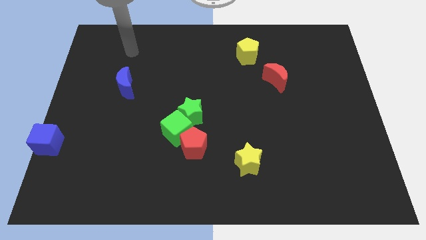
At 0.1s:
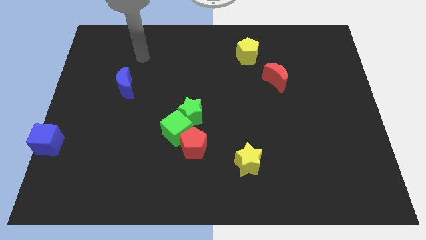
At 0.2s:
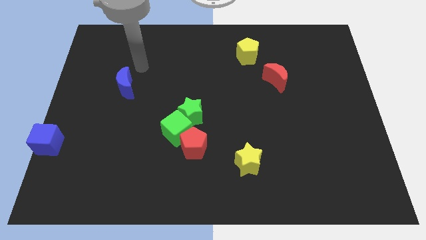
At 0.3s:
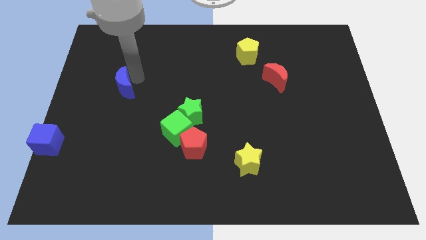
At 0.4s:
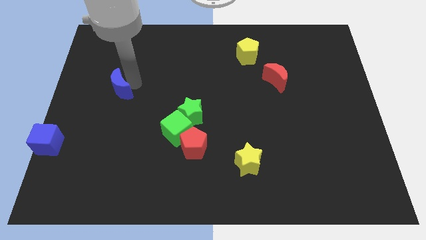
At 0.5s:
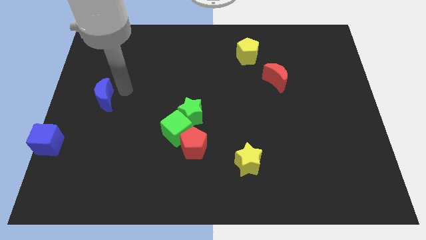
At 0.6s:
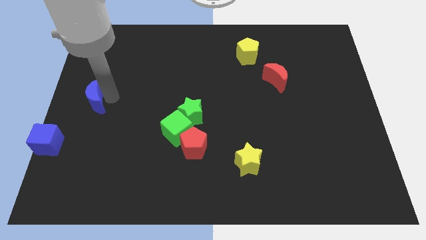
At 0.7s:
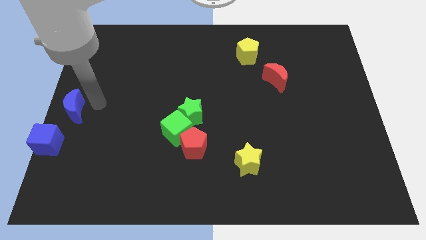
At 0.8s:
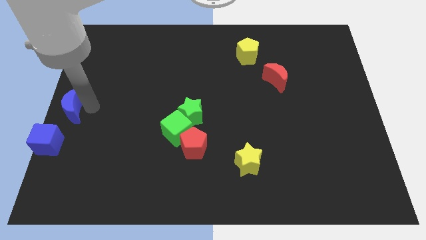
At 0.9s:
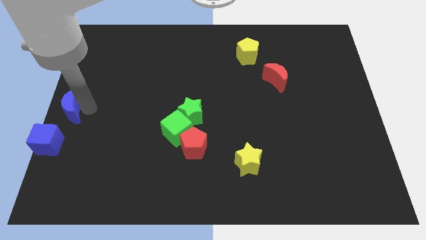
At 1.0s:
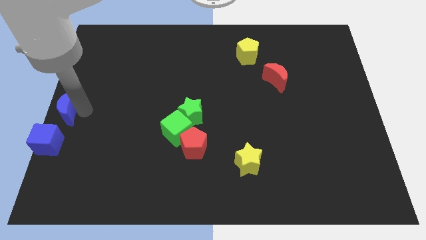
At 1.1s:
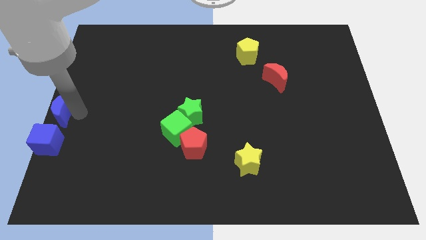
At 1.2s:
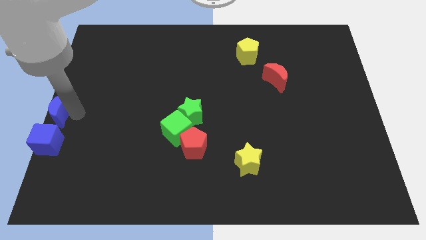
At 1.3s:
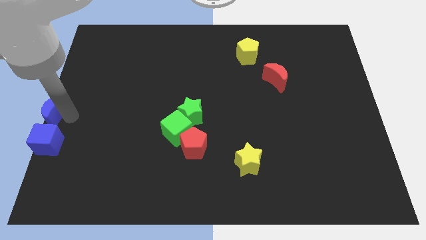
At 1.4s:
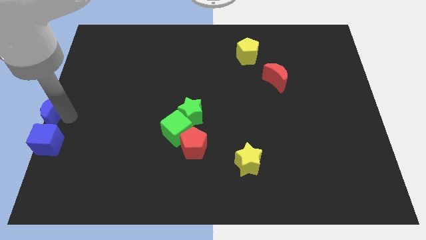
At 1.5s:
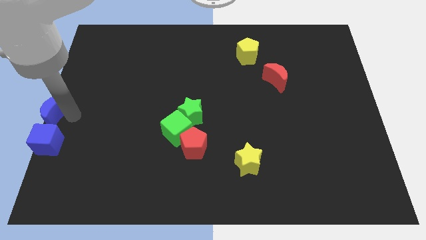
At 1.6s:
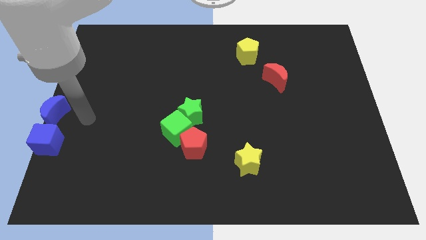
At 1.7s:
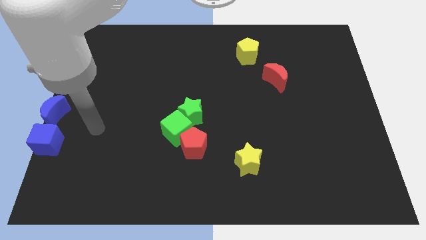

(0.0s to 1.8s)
push the blue moon to the top side of the blue cube

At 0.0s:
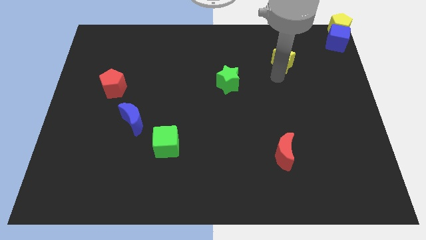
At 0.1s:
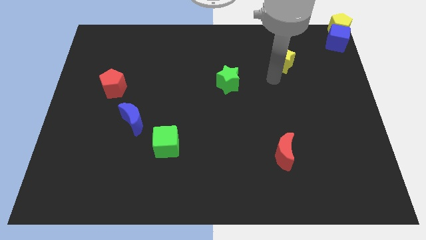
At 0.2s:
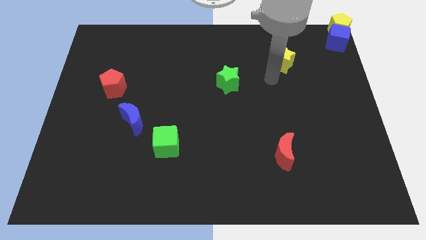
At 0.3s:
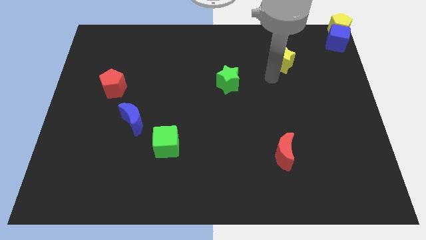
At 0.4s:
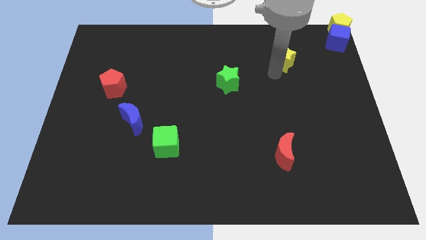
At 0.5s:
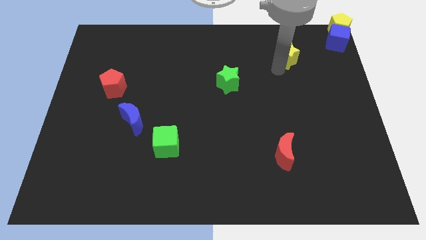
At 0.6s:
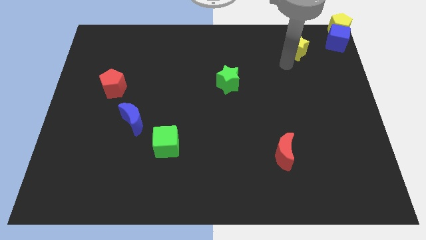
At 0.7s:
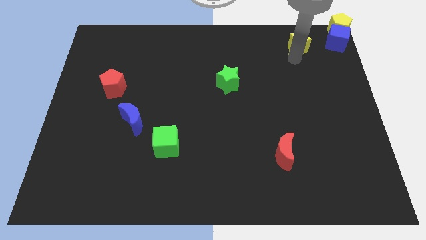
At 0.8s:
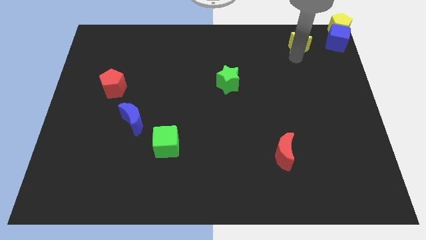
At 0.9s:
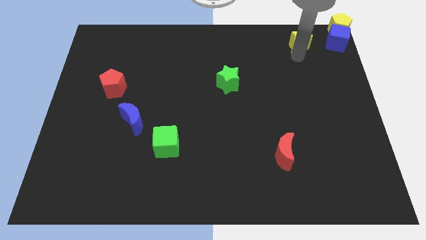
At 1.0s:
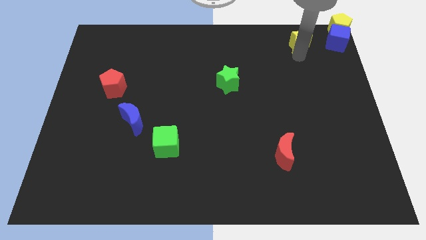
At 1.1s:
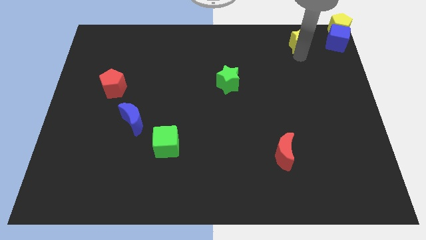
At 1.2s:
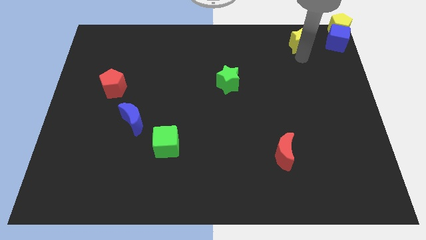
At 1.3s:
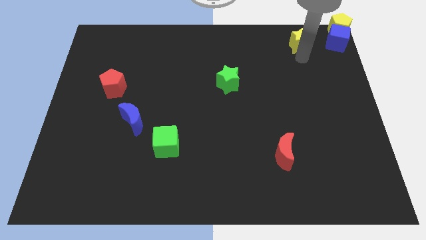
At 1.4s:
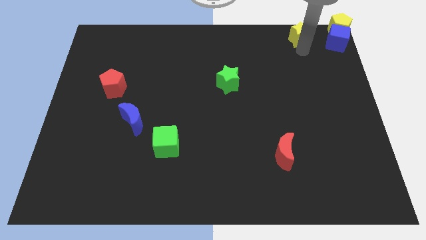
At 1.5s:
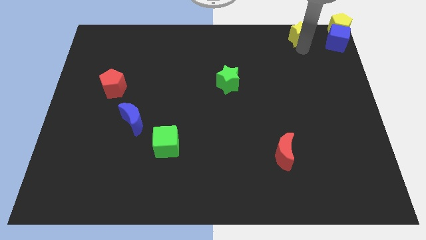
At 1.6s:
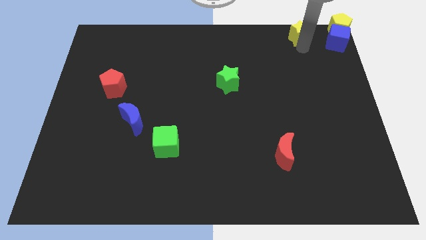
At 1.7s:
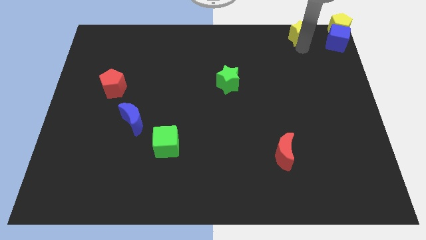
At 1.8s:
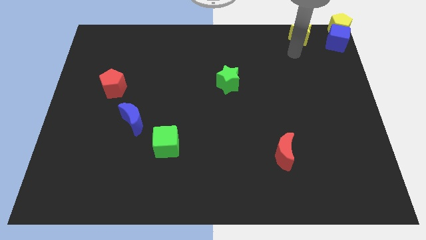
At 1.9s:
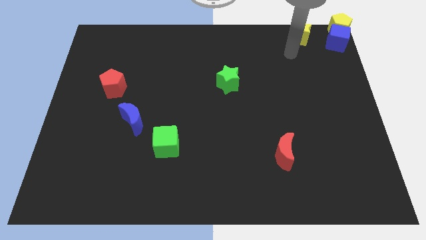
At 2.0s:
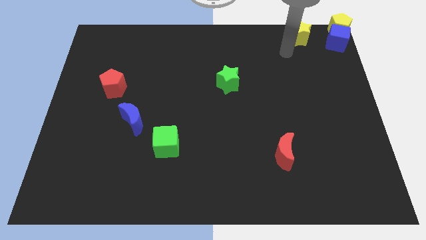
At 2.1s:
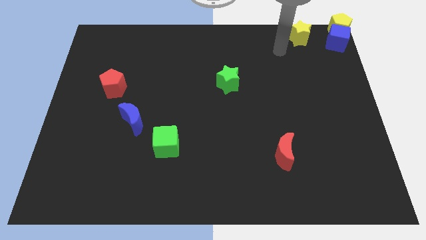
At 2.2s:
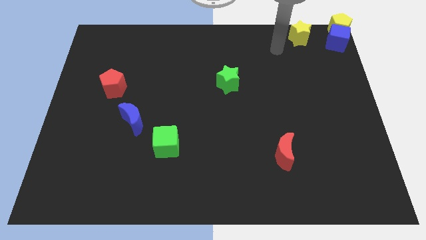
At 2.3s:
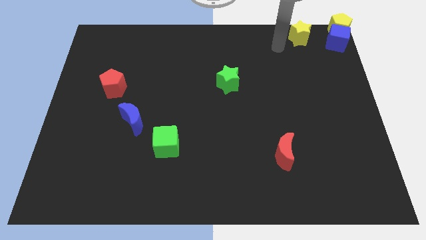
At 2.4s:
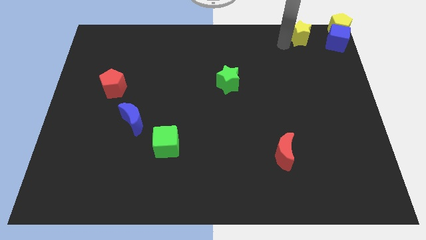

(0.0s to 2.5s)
place the yellow star left to the blue cube

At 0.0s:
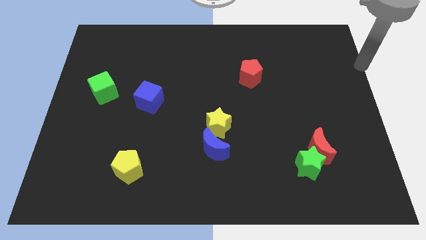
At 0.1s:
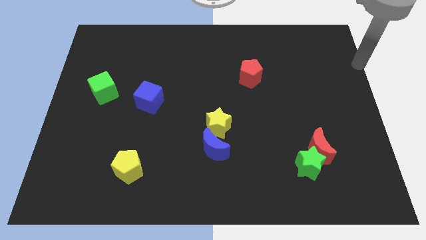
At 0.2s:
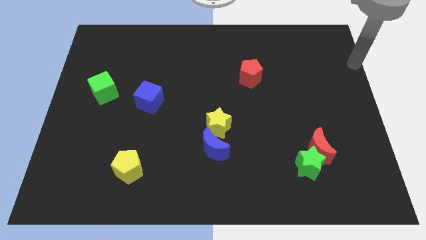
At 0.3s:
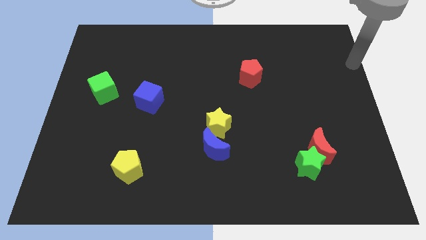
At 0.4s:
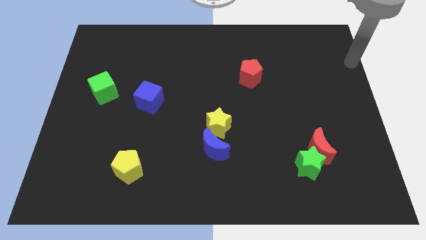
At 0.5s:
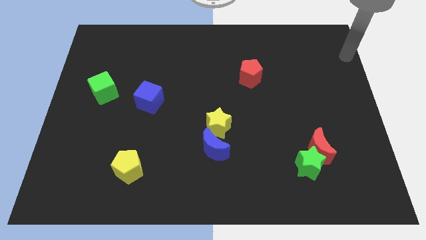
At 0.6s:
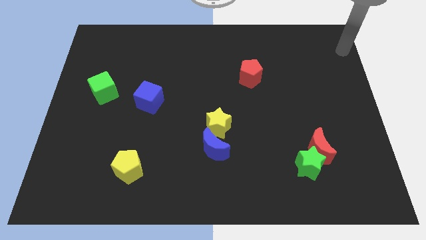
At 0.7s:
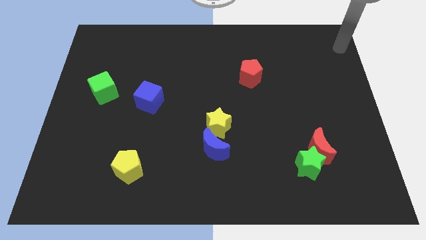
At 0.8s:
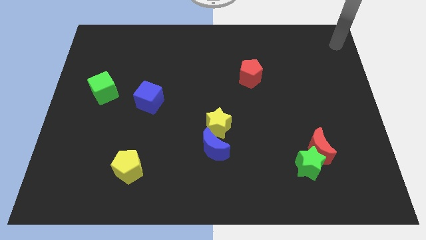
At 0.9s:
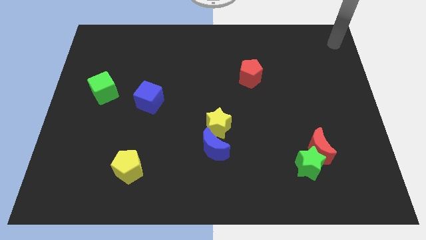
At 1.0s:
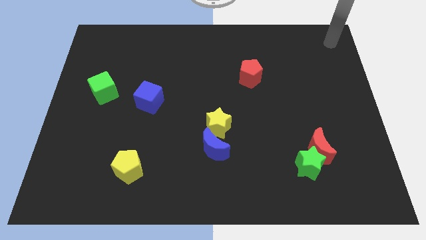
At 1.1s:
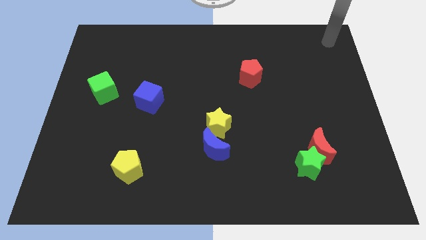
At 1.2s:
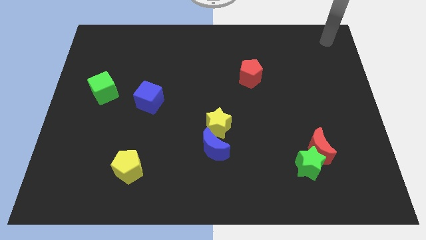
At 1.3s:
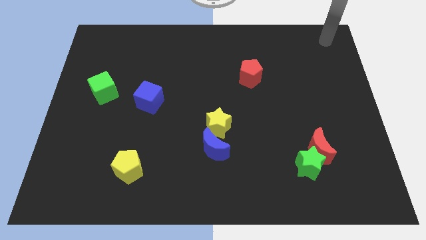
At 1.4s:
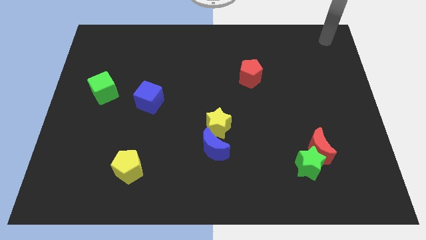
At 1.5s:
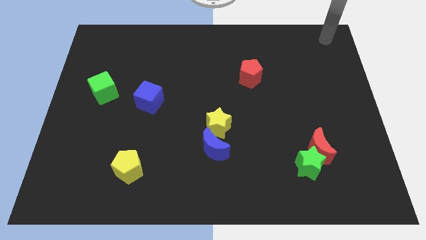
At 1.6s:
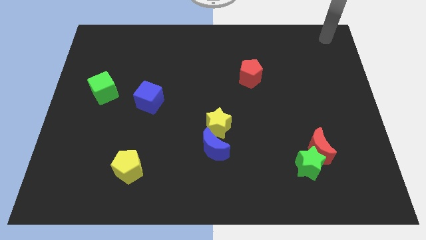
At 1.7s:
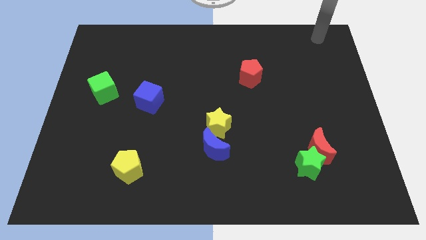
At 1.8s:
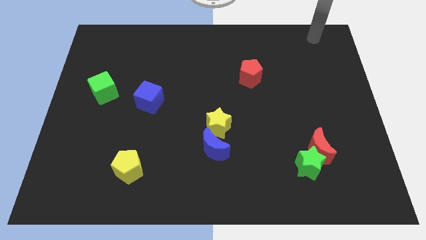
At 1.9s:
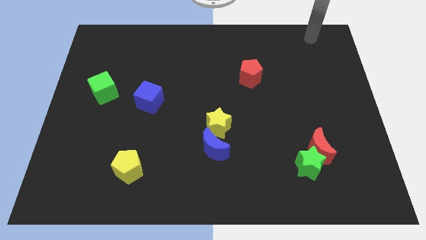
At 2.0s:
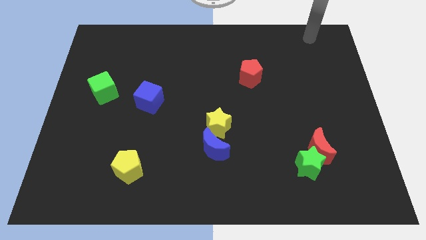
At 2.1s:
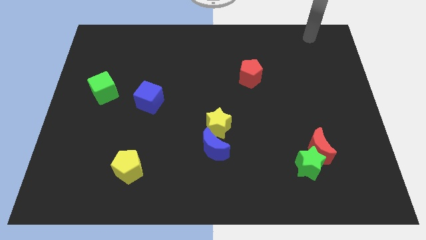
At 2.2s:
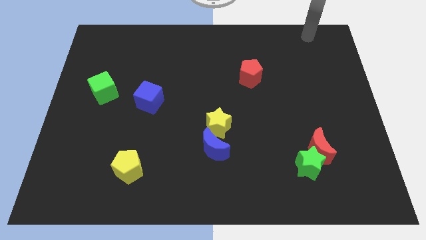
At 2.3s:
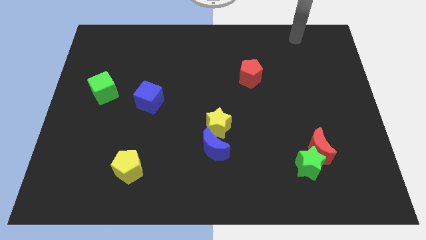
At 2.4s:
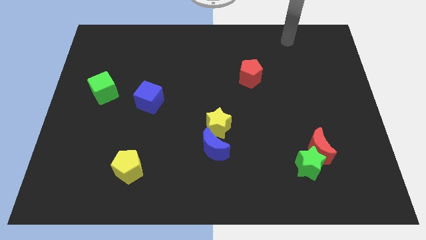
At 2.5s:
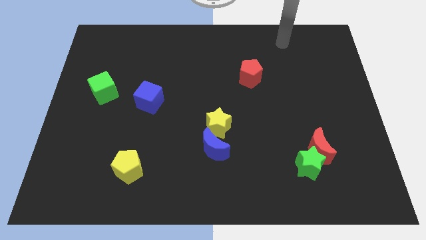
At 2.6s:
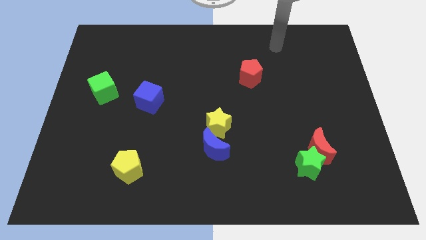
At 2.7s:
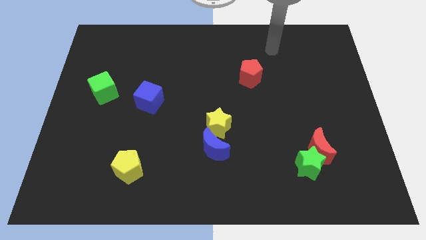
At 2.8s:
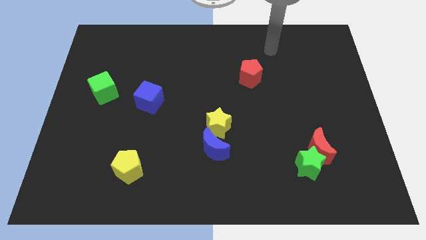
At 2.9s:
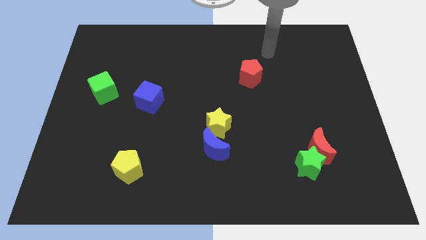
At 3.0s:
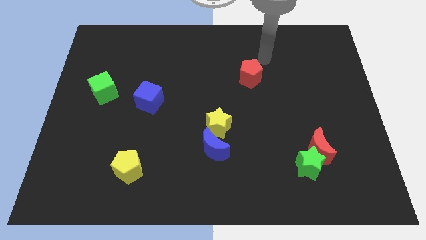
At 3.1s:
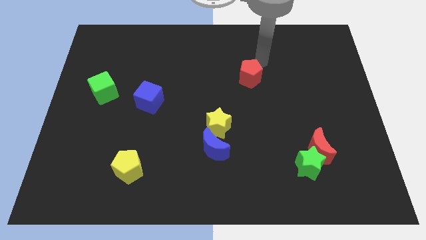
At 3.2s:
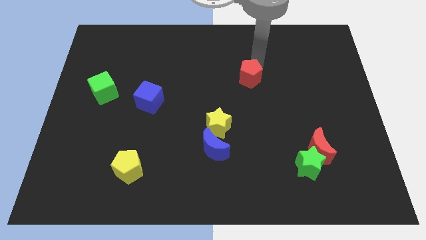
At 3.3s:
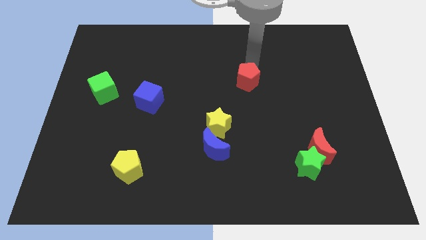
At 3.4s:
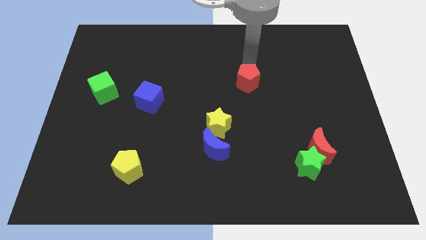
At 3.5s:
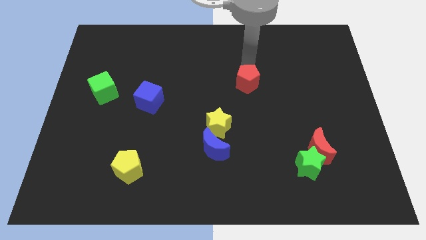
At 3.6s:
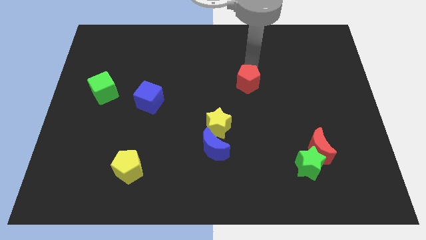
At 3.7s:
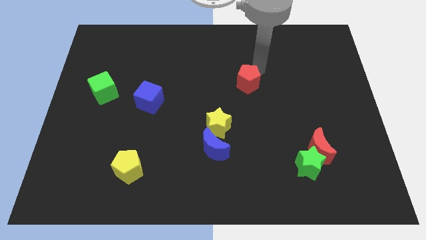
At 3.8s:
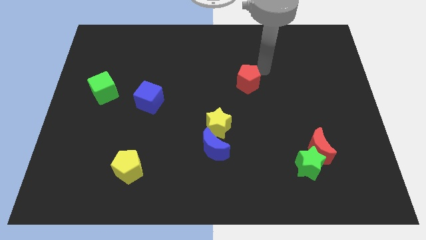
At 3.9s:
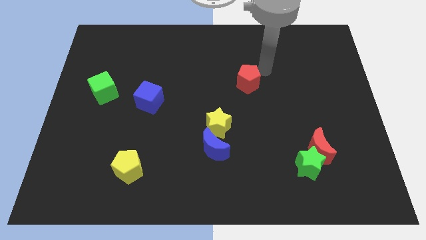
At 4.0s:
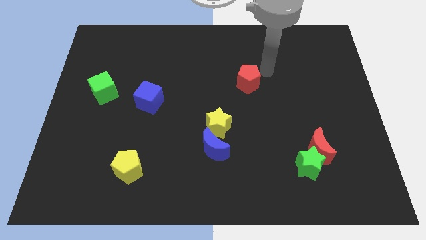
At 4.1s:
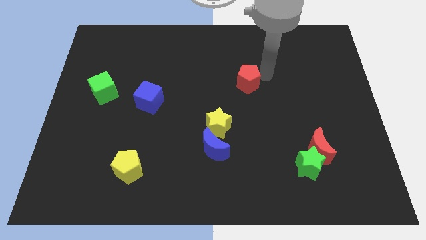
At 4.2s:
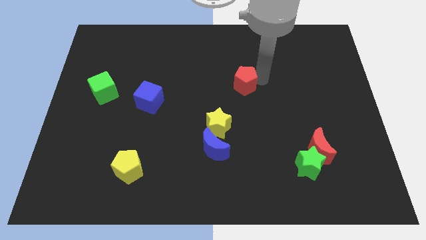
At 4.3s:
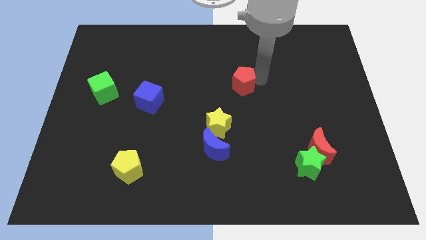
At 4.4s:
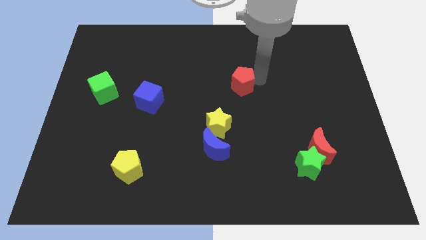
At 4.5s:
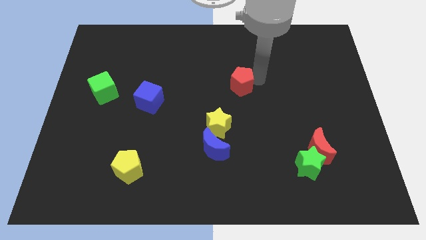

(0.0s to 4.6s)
slightly push the red pentagon towards the yellow star

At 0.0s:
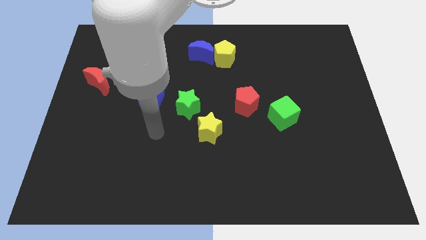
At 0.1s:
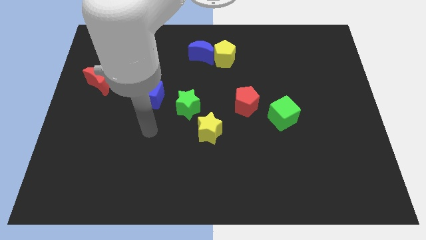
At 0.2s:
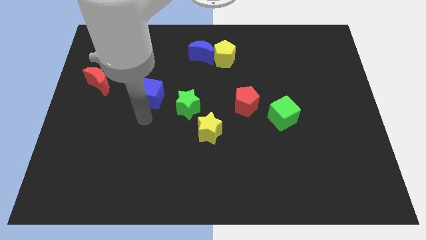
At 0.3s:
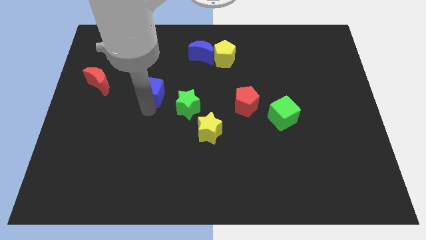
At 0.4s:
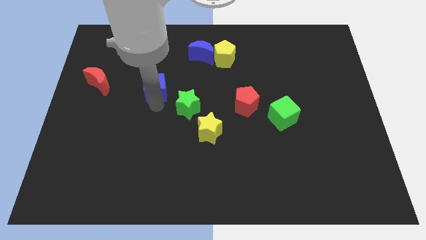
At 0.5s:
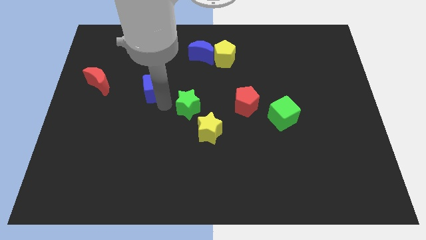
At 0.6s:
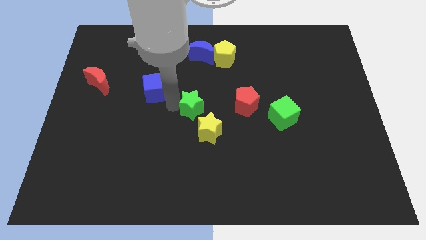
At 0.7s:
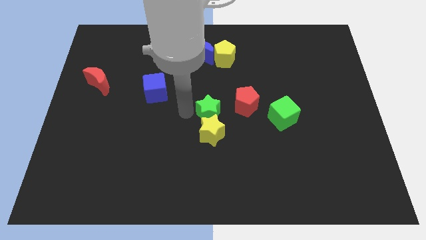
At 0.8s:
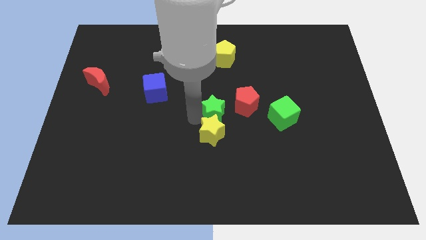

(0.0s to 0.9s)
place green star above yellow star
